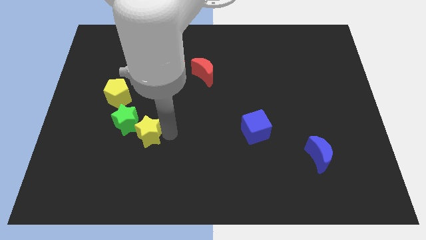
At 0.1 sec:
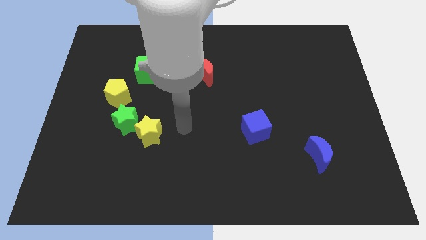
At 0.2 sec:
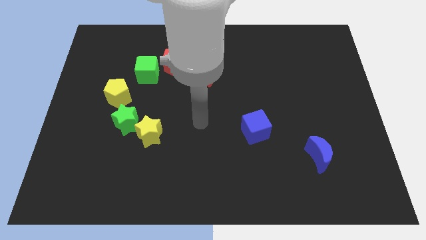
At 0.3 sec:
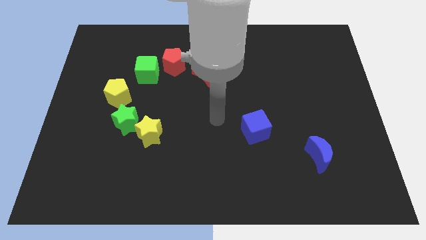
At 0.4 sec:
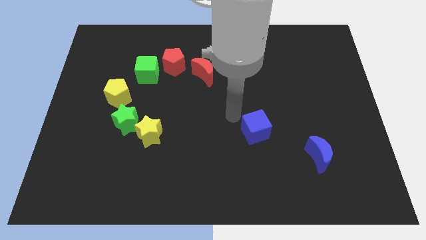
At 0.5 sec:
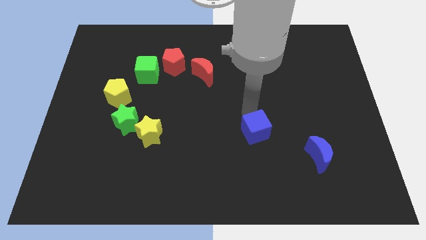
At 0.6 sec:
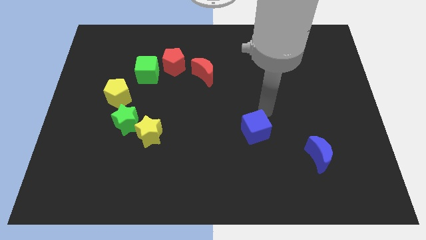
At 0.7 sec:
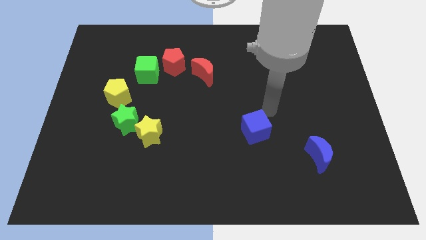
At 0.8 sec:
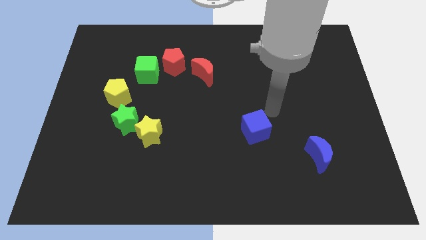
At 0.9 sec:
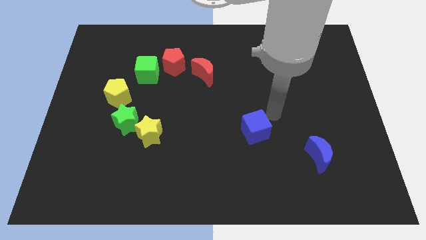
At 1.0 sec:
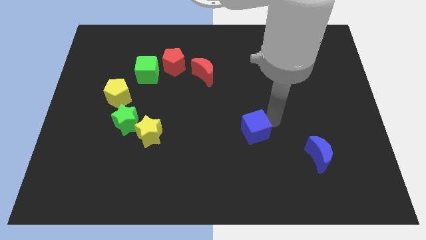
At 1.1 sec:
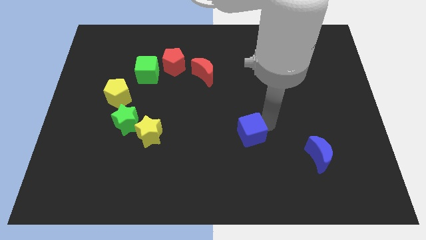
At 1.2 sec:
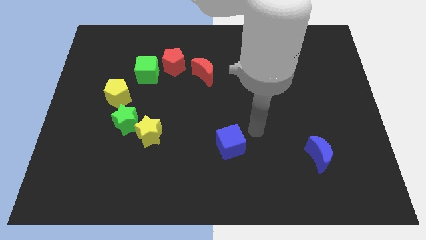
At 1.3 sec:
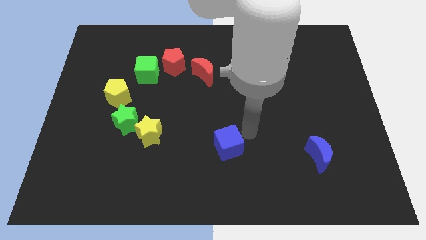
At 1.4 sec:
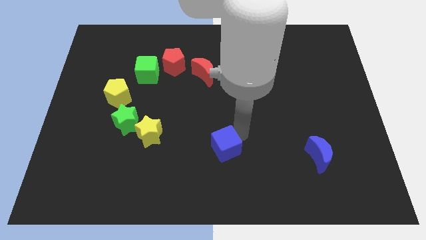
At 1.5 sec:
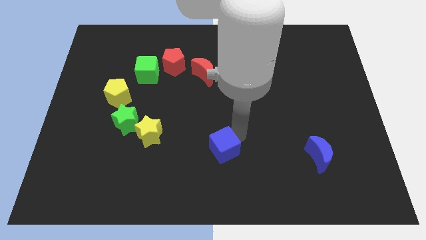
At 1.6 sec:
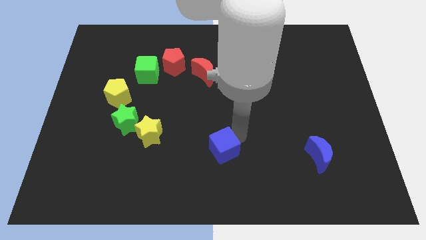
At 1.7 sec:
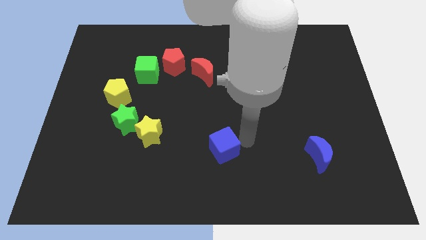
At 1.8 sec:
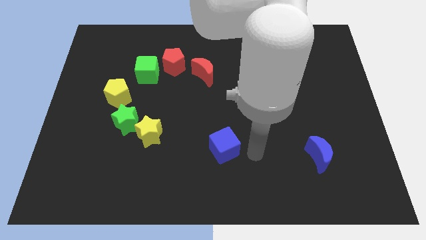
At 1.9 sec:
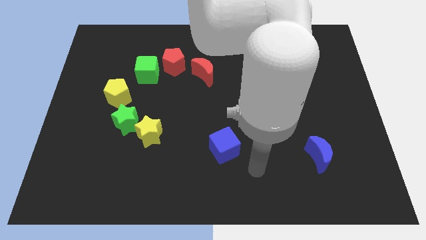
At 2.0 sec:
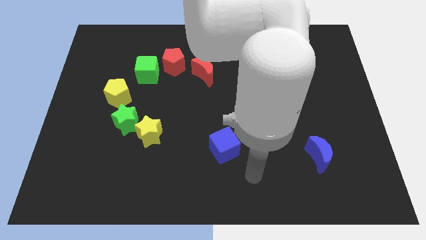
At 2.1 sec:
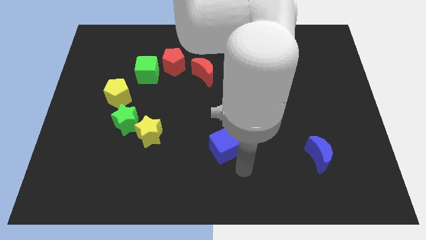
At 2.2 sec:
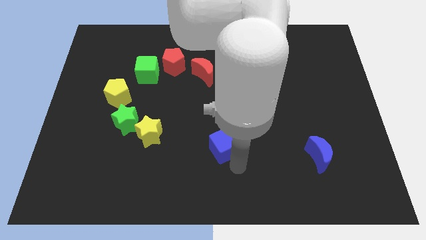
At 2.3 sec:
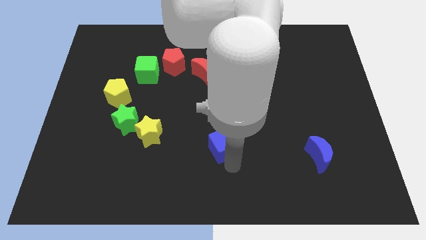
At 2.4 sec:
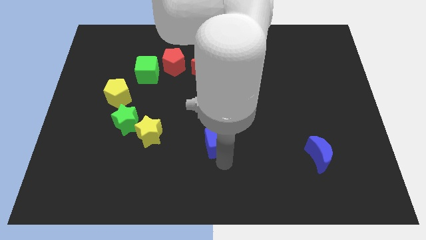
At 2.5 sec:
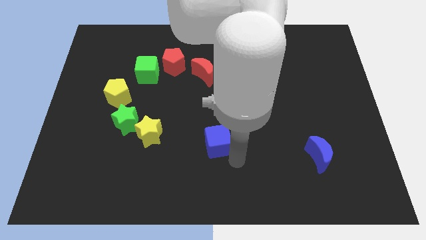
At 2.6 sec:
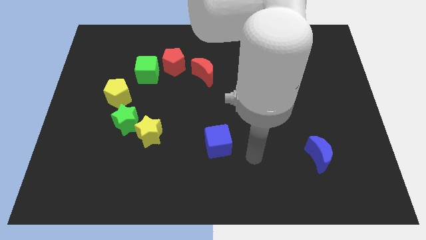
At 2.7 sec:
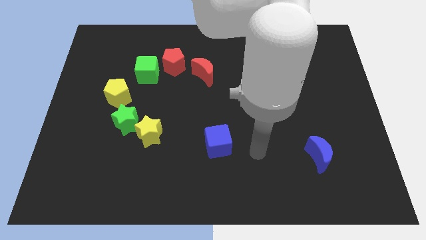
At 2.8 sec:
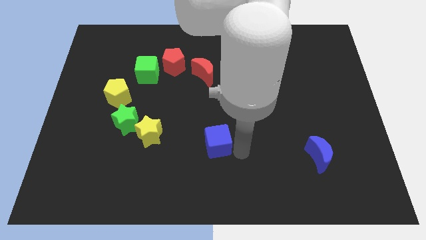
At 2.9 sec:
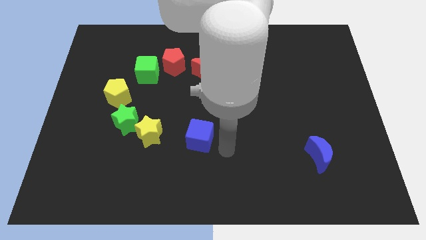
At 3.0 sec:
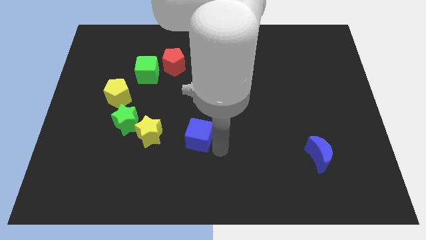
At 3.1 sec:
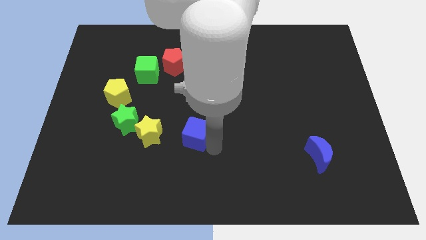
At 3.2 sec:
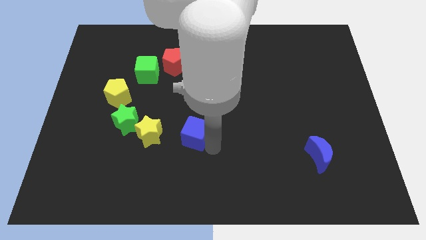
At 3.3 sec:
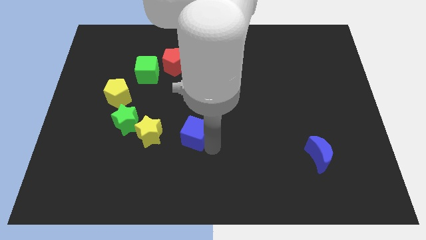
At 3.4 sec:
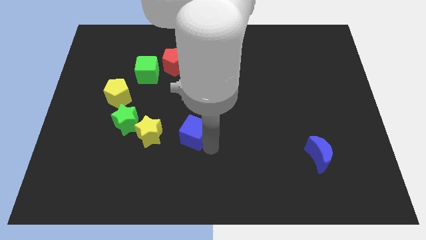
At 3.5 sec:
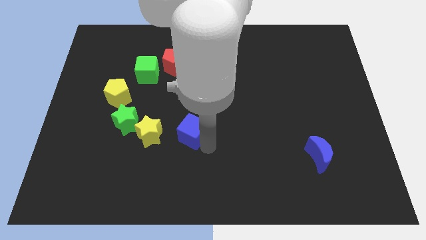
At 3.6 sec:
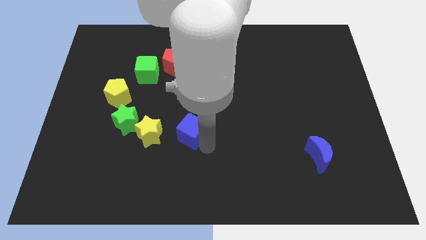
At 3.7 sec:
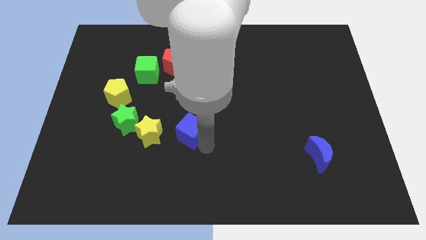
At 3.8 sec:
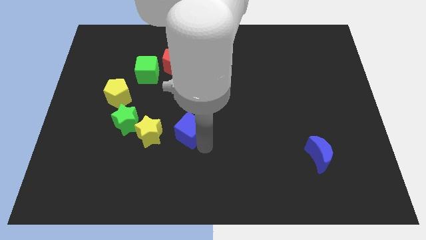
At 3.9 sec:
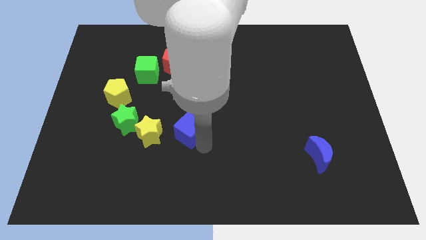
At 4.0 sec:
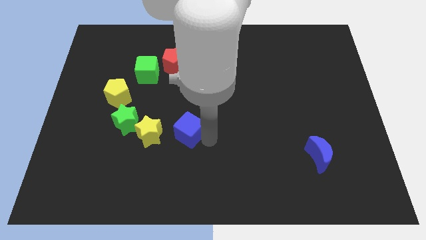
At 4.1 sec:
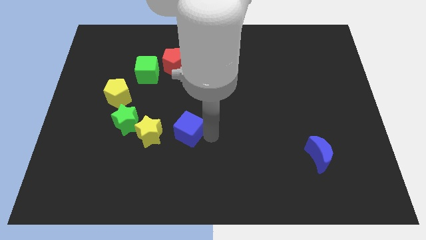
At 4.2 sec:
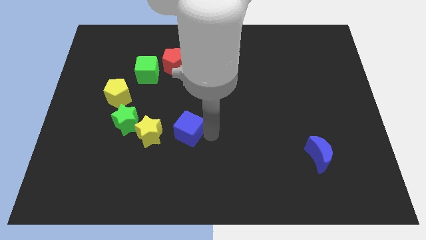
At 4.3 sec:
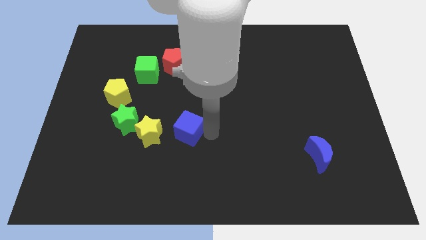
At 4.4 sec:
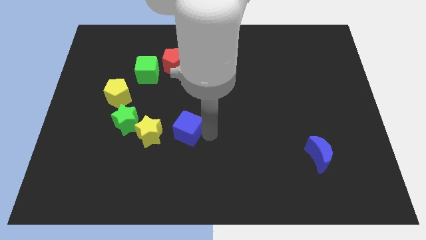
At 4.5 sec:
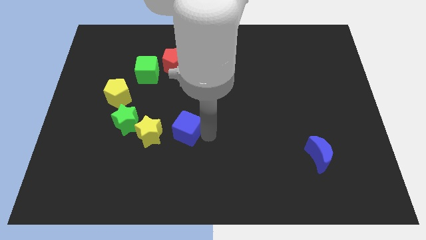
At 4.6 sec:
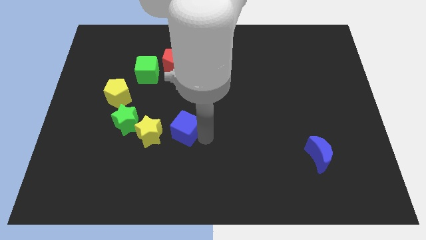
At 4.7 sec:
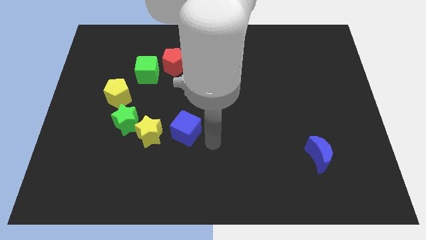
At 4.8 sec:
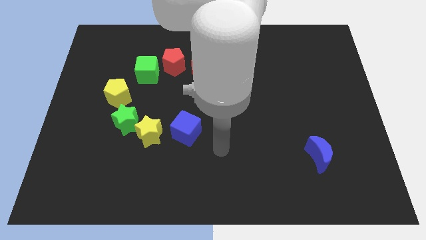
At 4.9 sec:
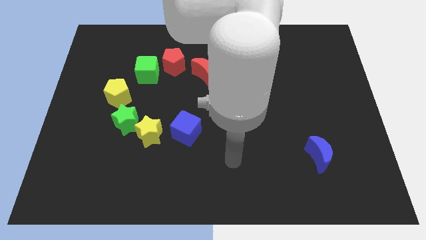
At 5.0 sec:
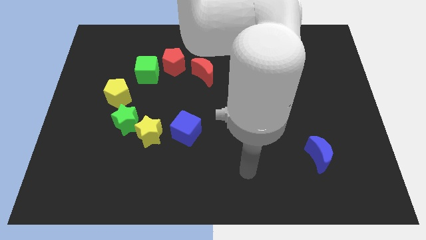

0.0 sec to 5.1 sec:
place the blue cube beside yellow star

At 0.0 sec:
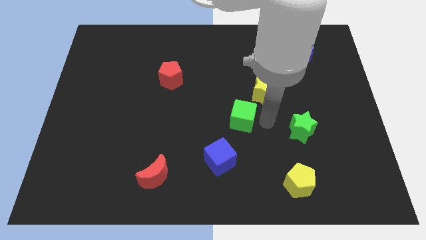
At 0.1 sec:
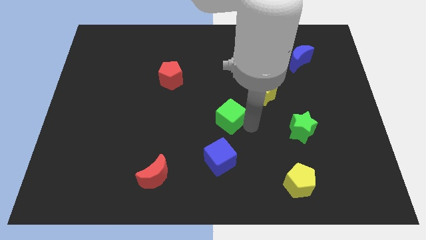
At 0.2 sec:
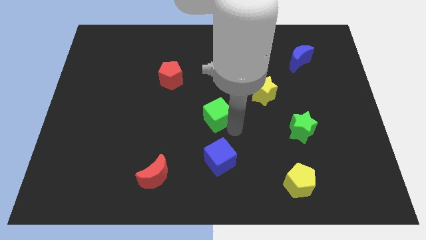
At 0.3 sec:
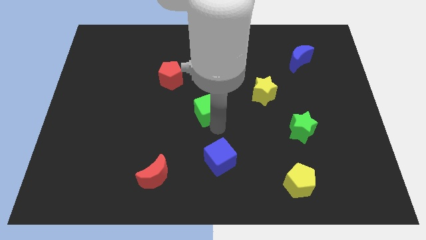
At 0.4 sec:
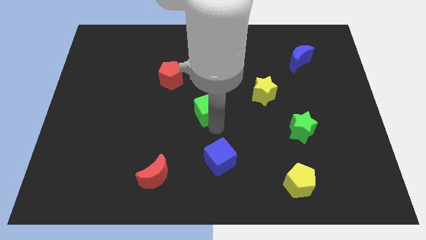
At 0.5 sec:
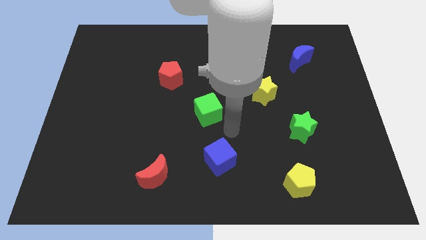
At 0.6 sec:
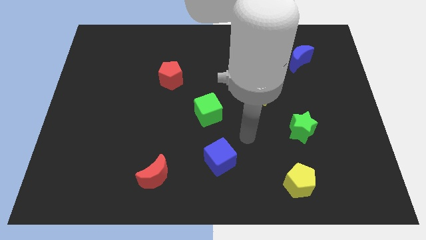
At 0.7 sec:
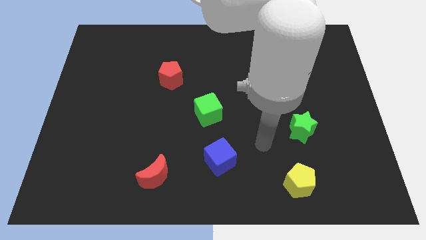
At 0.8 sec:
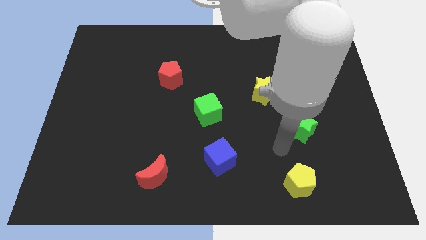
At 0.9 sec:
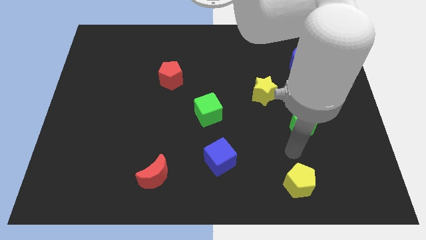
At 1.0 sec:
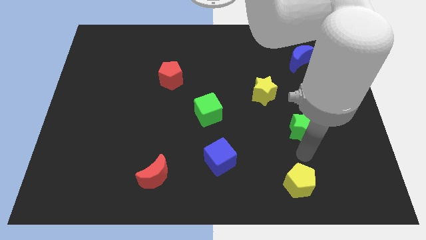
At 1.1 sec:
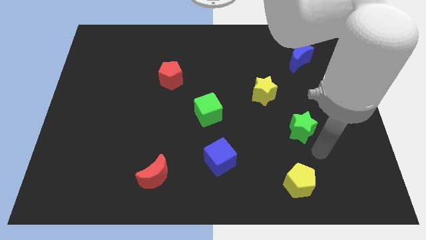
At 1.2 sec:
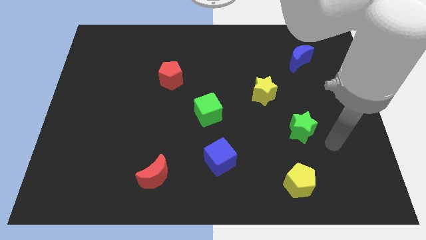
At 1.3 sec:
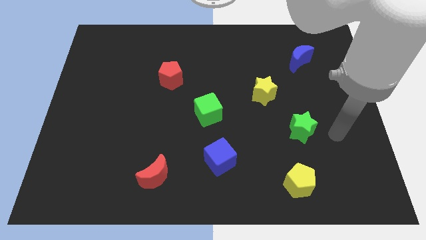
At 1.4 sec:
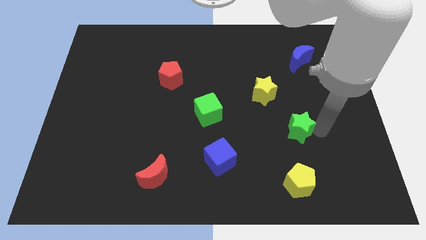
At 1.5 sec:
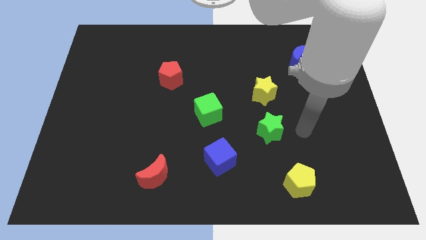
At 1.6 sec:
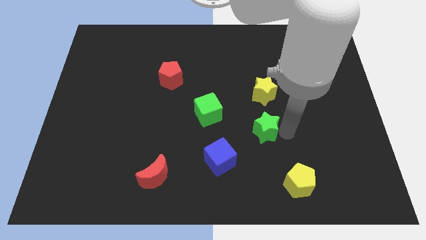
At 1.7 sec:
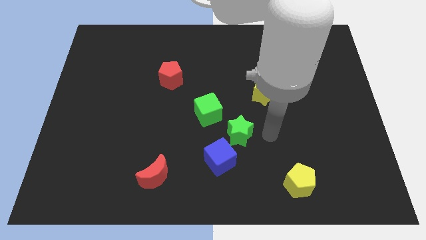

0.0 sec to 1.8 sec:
place the green star diagonally at the top right of the blue cube

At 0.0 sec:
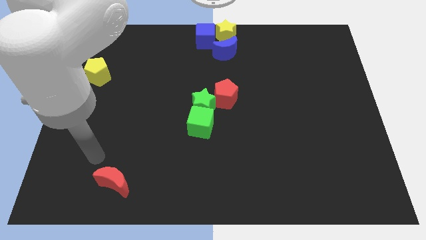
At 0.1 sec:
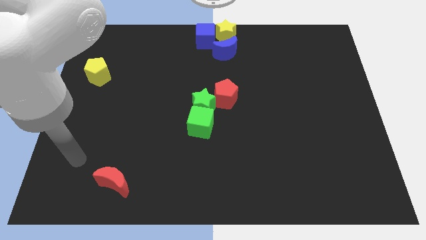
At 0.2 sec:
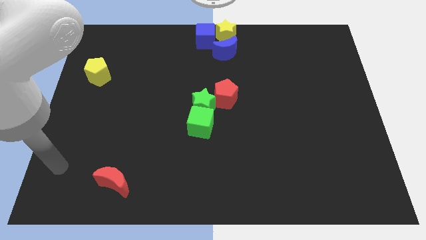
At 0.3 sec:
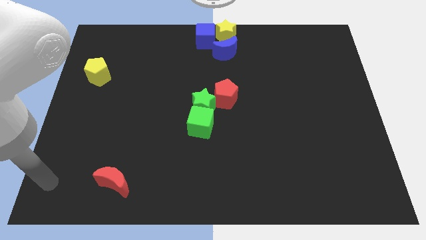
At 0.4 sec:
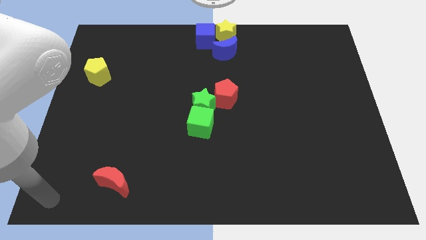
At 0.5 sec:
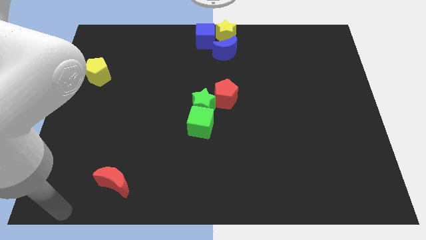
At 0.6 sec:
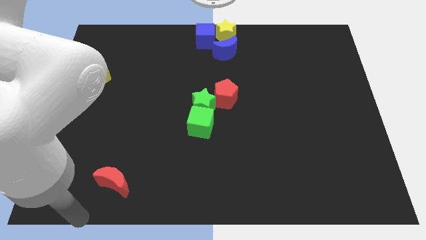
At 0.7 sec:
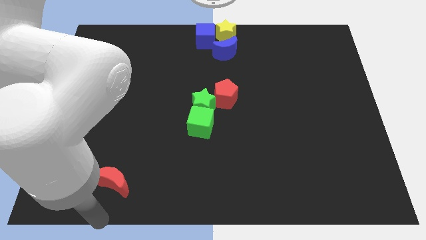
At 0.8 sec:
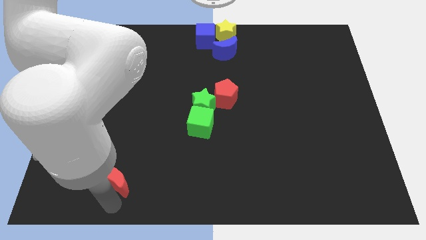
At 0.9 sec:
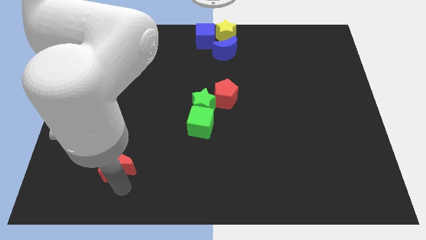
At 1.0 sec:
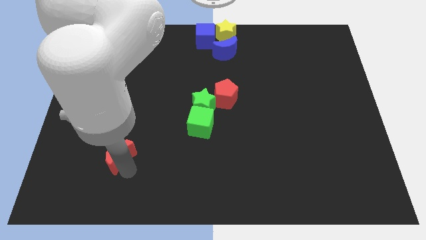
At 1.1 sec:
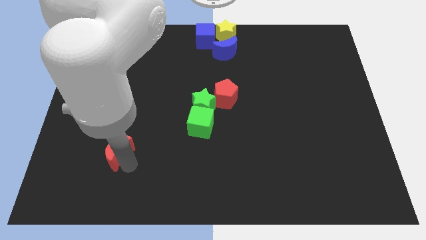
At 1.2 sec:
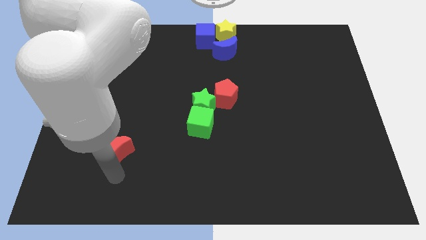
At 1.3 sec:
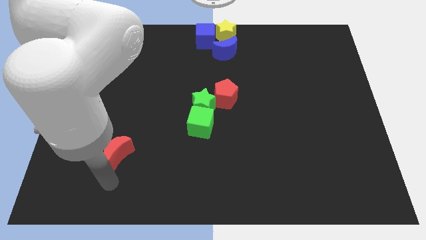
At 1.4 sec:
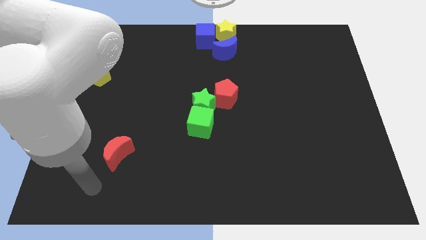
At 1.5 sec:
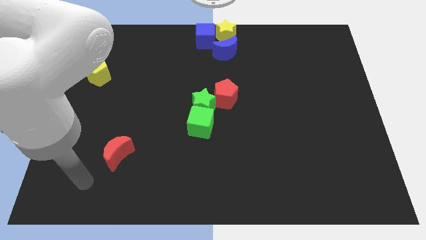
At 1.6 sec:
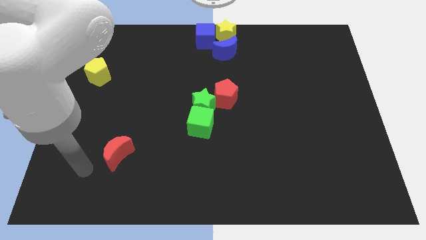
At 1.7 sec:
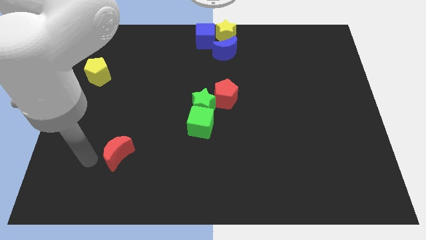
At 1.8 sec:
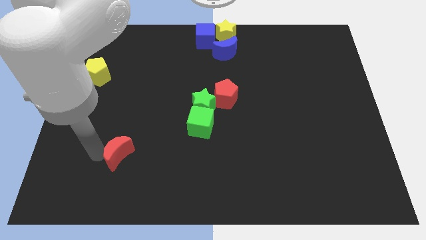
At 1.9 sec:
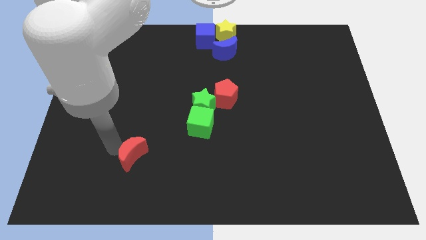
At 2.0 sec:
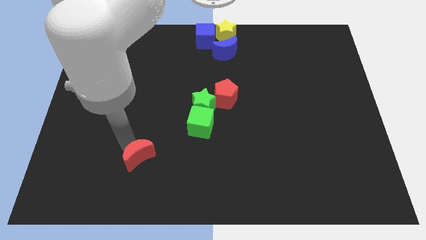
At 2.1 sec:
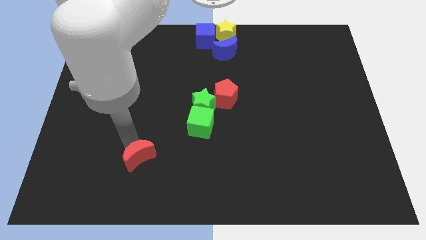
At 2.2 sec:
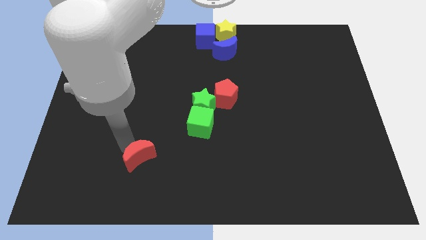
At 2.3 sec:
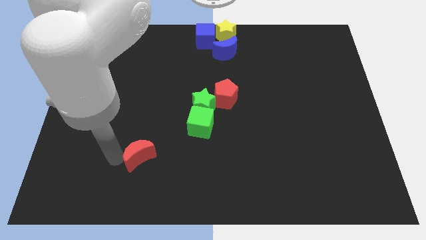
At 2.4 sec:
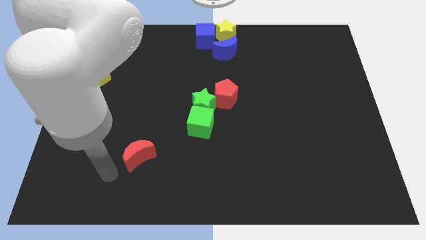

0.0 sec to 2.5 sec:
push the red moon towards the green cube
